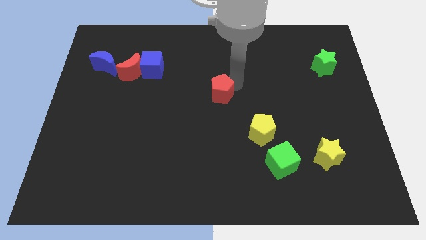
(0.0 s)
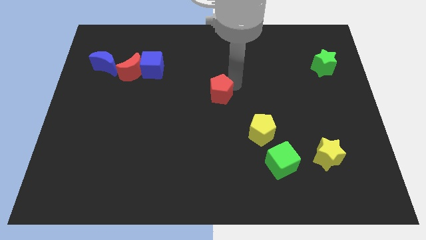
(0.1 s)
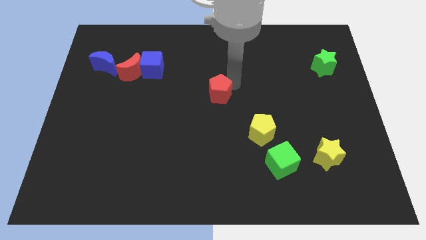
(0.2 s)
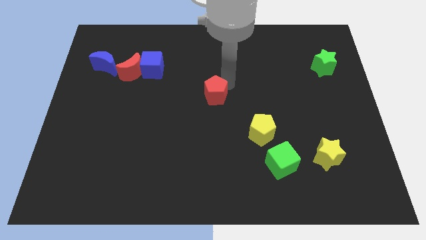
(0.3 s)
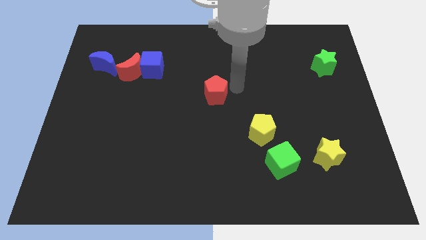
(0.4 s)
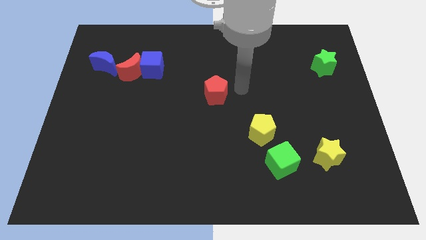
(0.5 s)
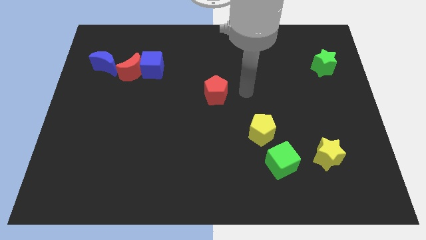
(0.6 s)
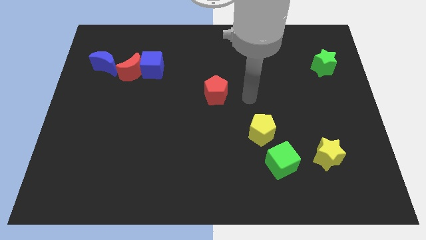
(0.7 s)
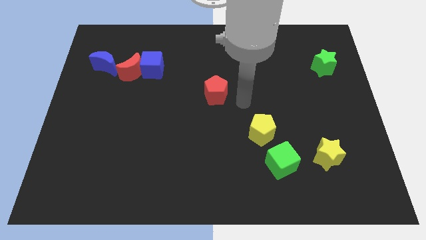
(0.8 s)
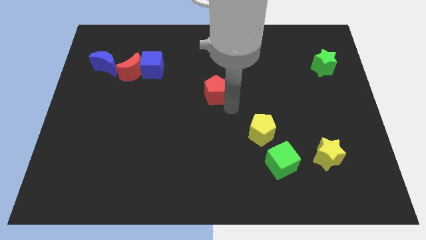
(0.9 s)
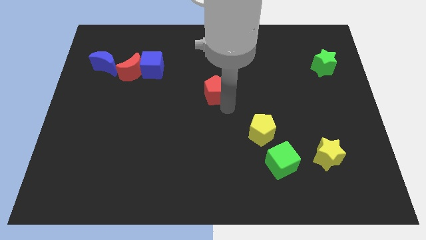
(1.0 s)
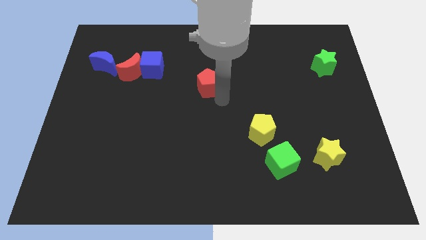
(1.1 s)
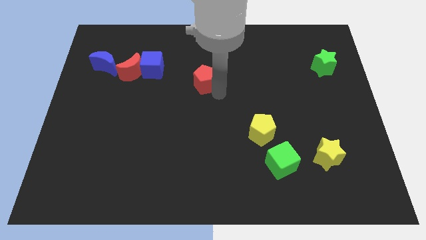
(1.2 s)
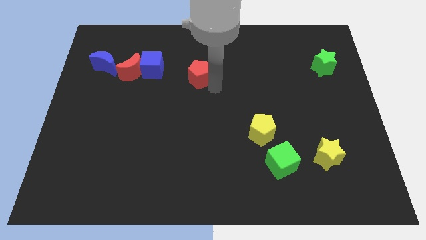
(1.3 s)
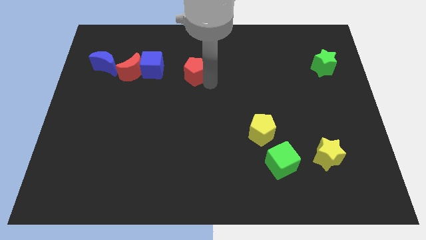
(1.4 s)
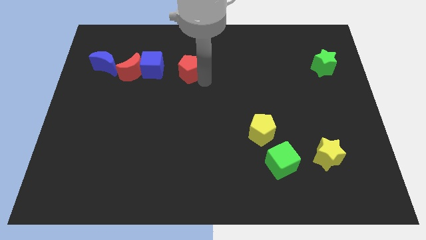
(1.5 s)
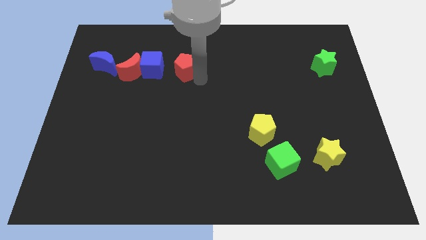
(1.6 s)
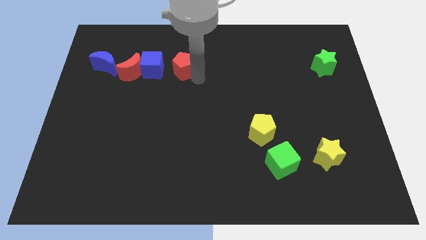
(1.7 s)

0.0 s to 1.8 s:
move the red pentagon to the right of the blue cube

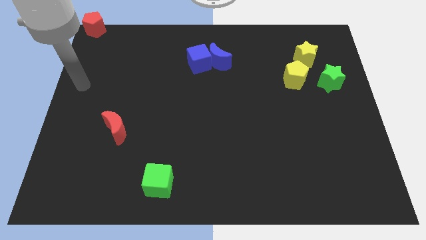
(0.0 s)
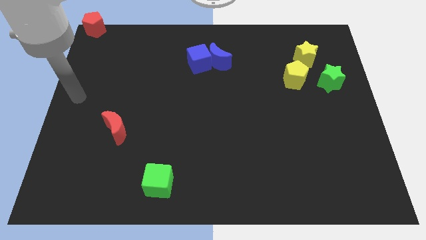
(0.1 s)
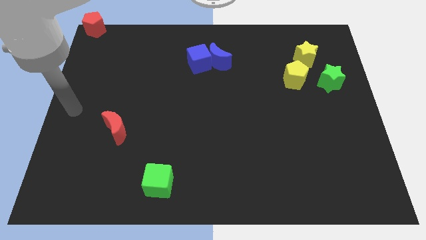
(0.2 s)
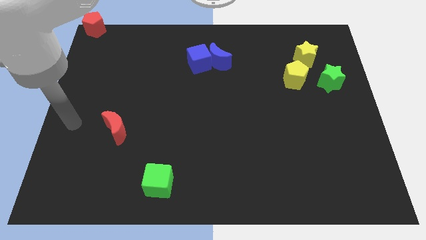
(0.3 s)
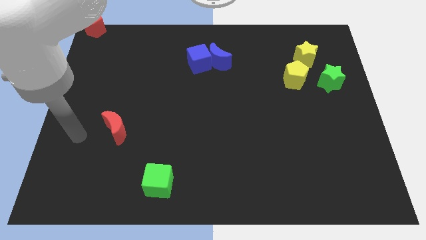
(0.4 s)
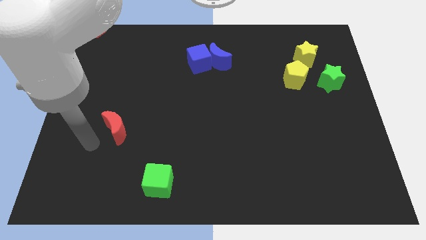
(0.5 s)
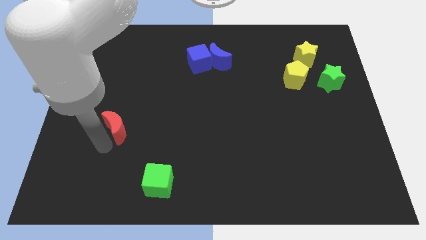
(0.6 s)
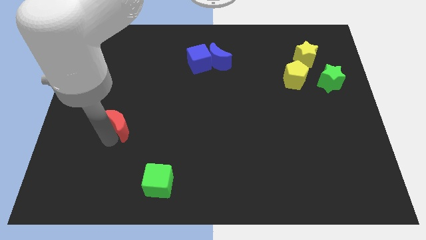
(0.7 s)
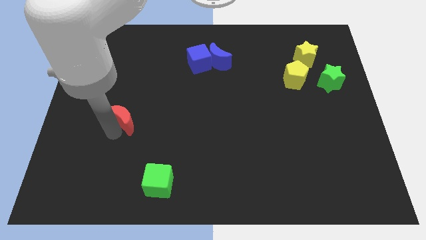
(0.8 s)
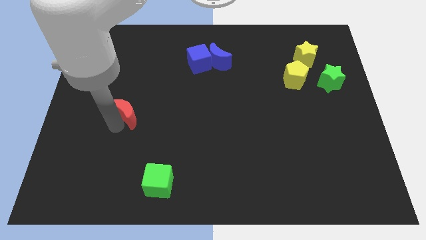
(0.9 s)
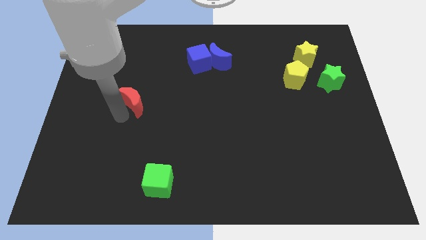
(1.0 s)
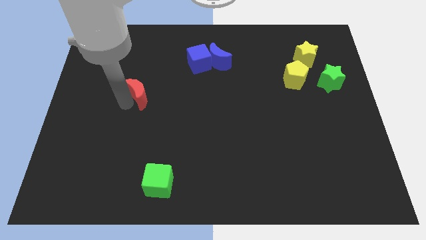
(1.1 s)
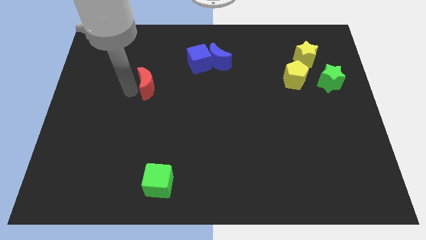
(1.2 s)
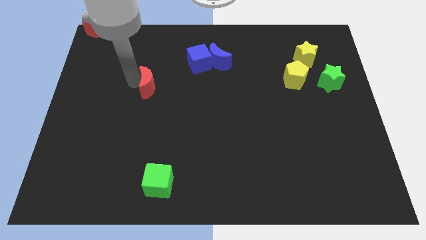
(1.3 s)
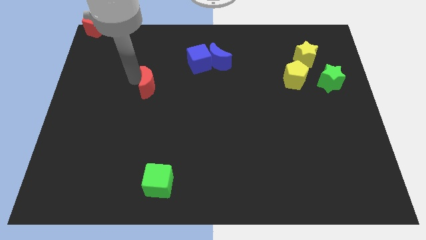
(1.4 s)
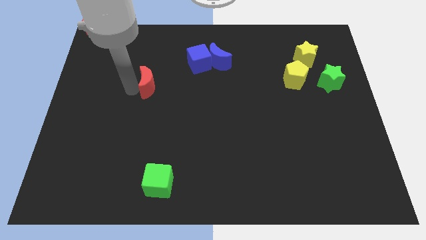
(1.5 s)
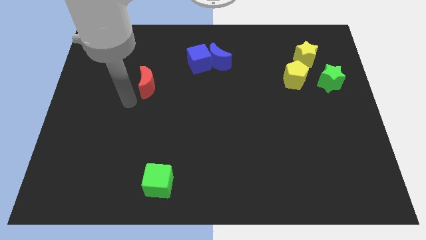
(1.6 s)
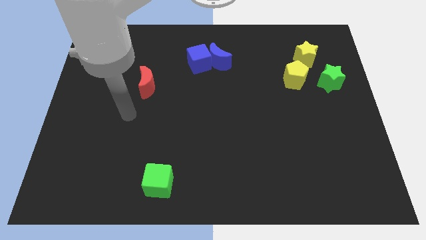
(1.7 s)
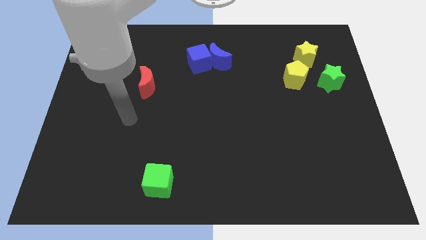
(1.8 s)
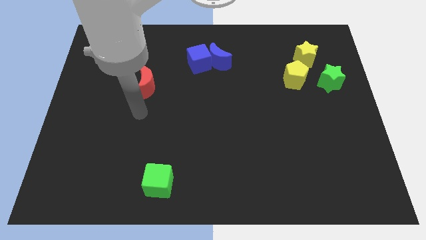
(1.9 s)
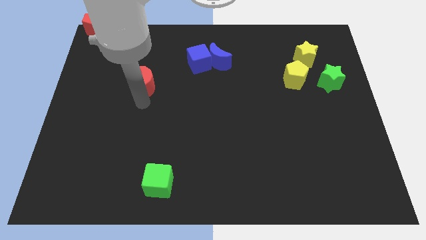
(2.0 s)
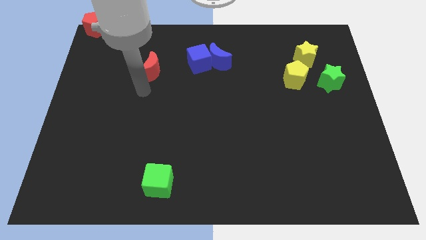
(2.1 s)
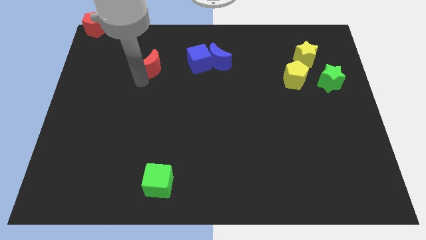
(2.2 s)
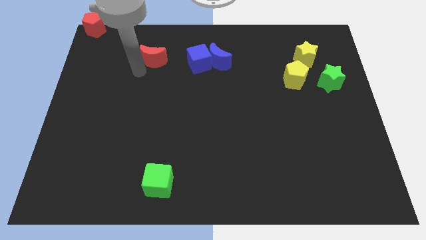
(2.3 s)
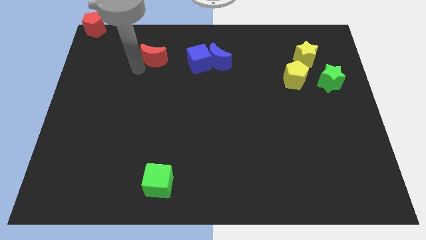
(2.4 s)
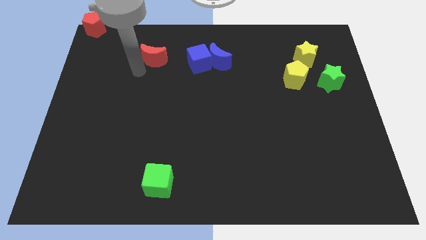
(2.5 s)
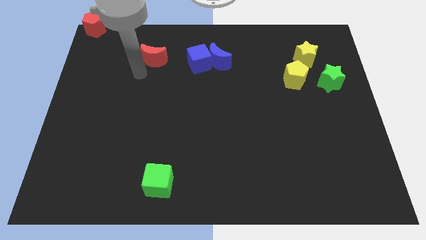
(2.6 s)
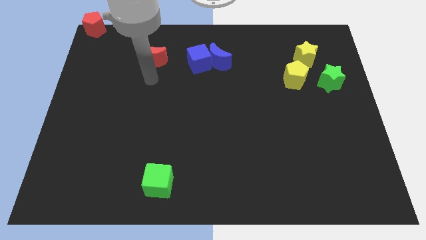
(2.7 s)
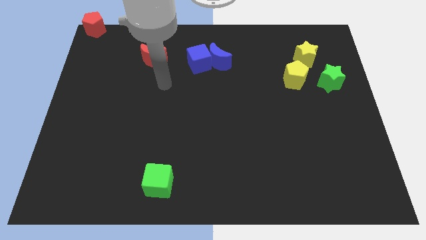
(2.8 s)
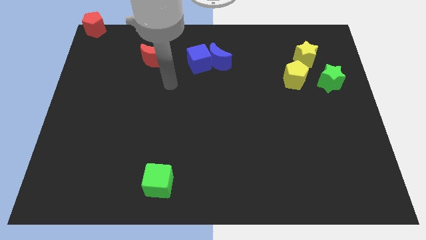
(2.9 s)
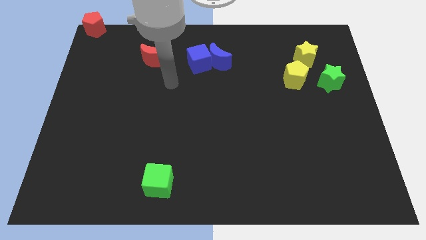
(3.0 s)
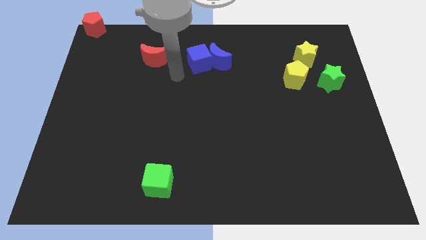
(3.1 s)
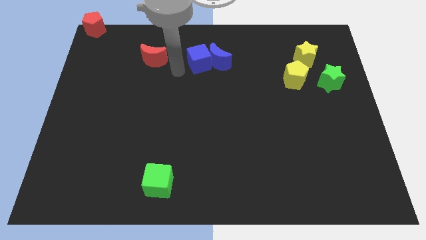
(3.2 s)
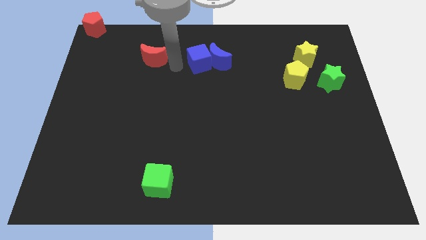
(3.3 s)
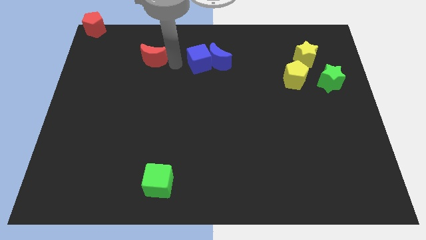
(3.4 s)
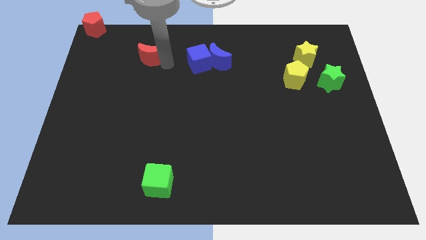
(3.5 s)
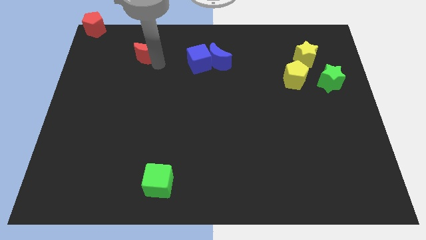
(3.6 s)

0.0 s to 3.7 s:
push the red moon upwards

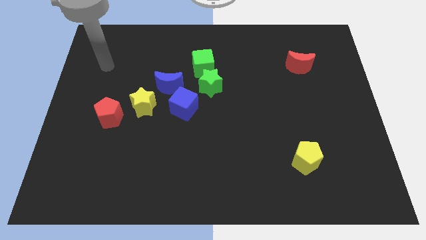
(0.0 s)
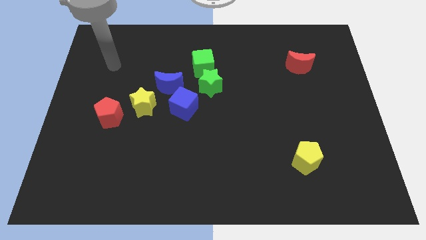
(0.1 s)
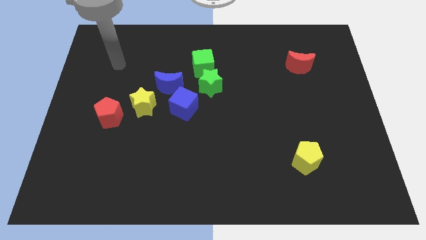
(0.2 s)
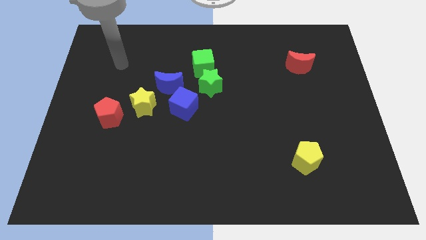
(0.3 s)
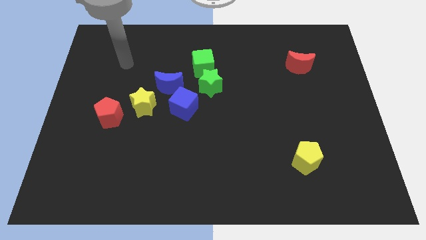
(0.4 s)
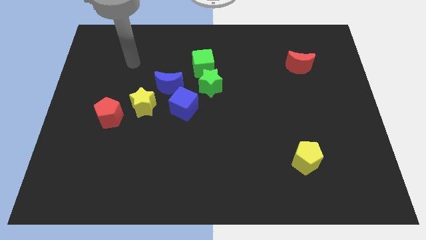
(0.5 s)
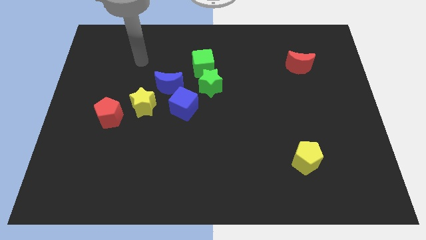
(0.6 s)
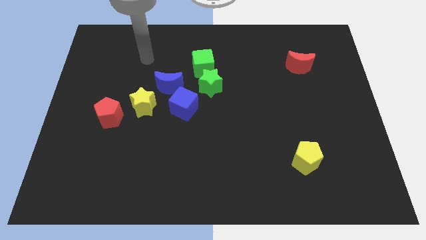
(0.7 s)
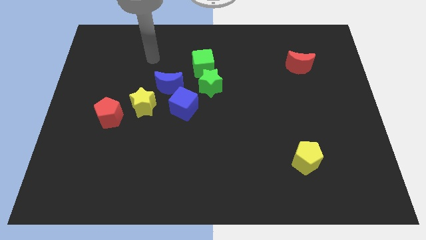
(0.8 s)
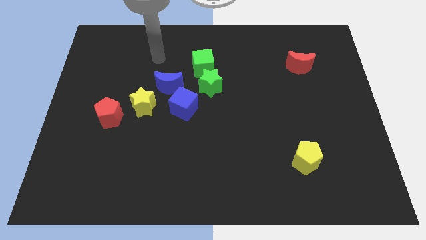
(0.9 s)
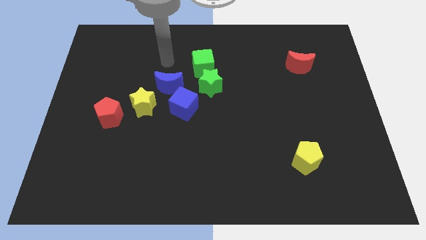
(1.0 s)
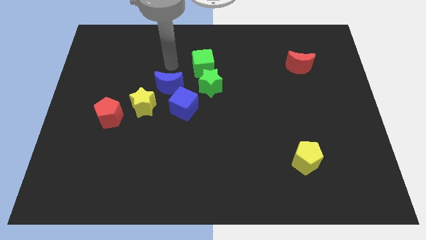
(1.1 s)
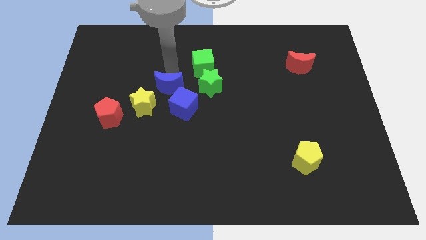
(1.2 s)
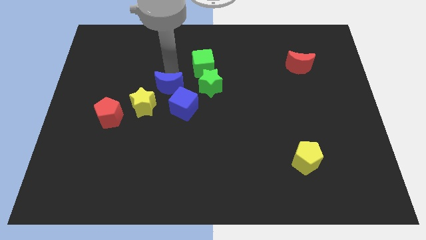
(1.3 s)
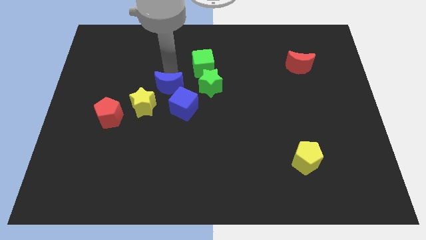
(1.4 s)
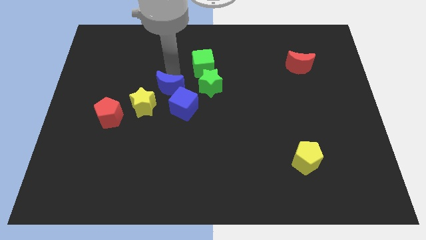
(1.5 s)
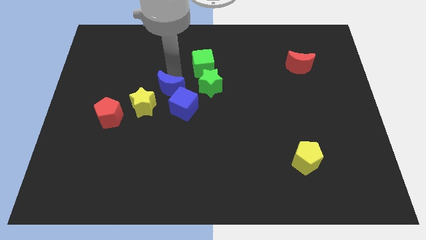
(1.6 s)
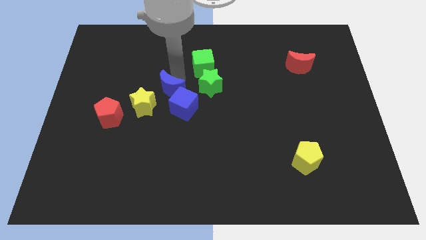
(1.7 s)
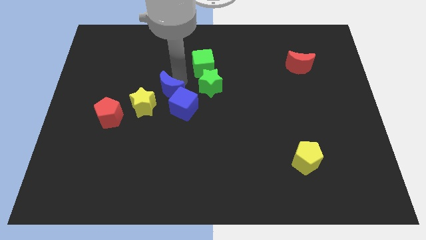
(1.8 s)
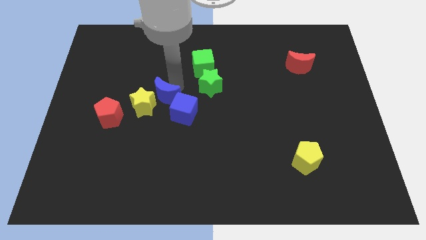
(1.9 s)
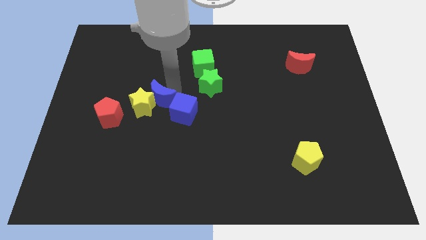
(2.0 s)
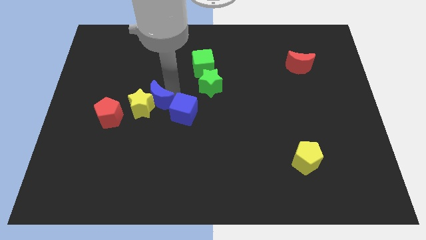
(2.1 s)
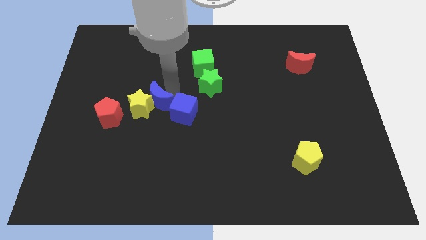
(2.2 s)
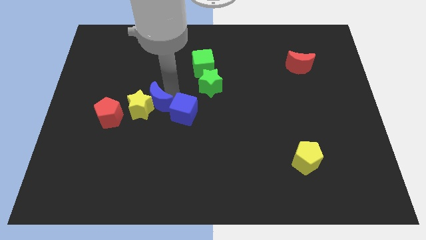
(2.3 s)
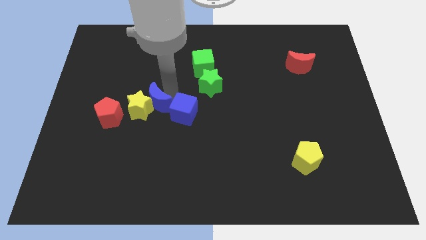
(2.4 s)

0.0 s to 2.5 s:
push the yellow star with the blue moon

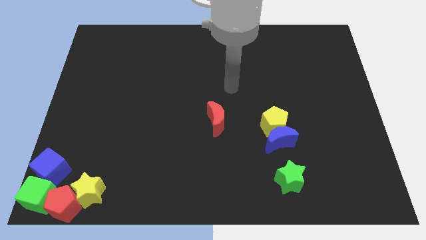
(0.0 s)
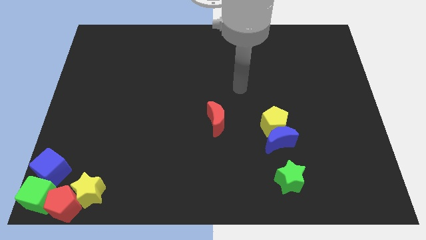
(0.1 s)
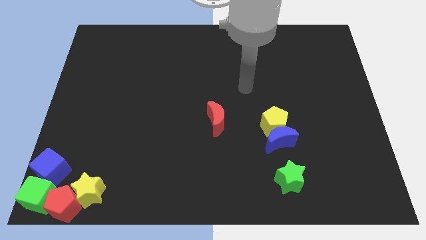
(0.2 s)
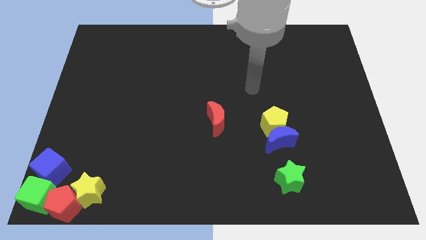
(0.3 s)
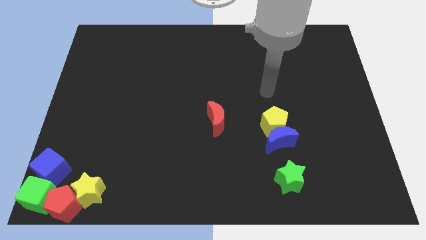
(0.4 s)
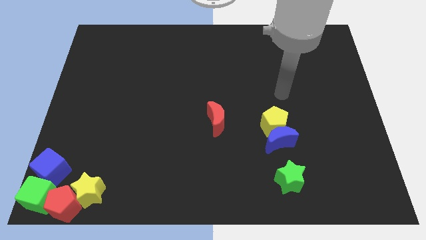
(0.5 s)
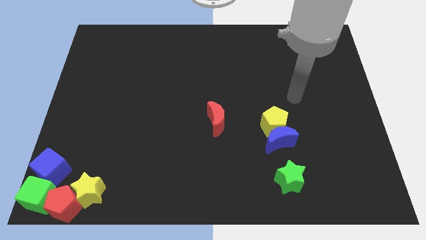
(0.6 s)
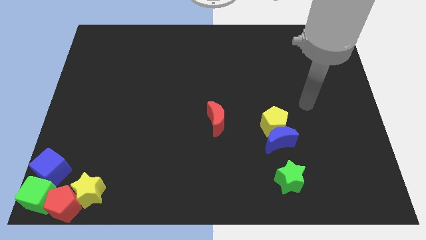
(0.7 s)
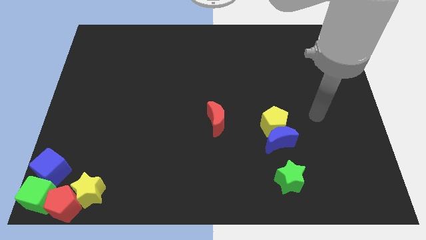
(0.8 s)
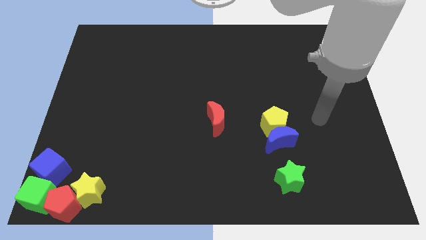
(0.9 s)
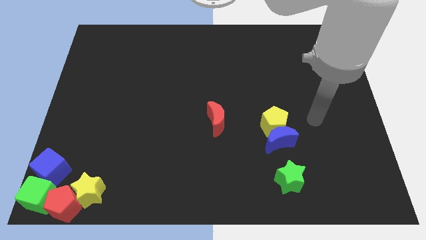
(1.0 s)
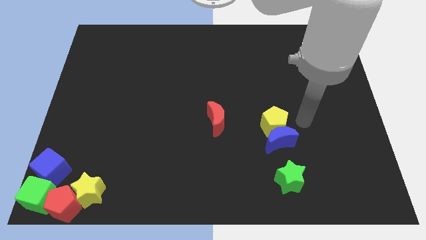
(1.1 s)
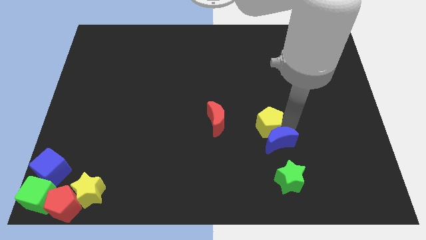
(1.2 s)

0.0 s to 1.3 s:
point your arm at the right side of the yellow pentagon
